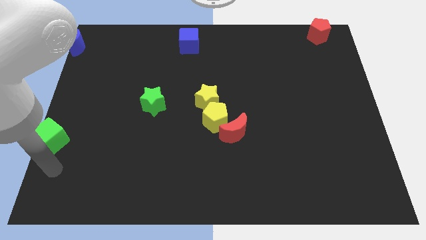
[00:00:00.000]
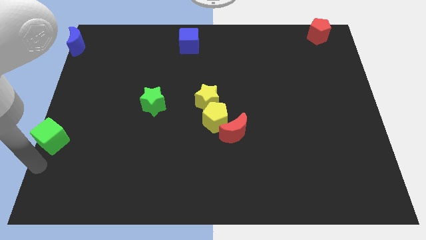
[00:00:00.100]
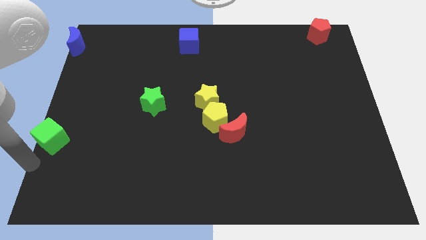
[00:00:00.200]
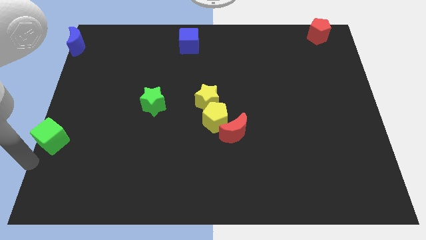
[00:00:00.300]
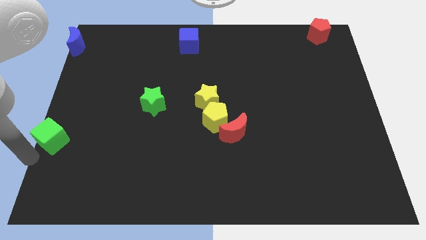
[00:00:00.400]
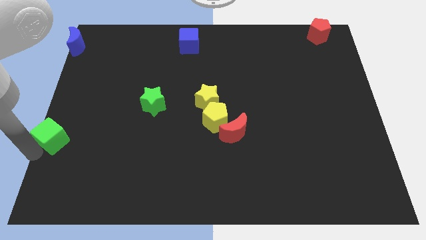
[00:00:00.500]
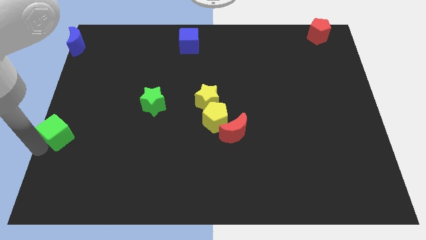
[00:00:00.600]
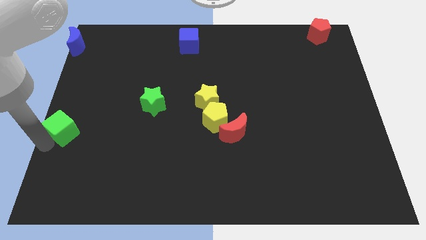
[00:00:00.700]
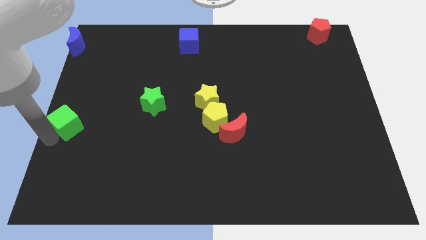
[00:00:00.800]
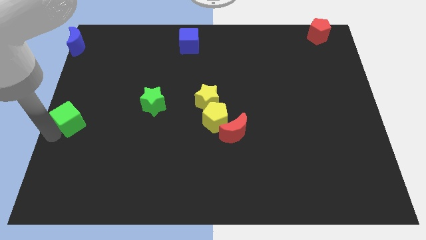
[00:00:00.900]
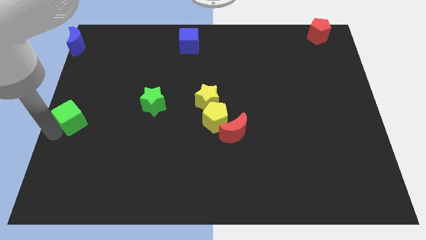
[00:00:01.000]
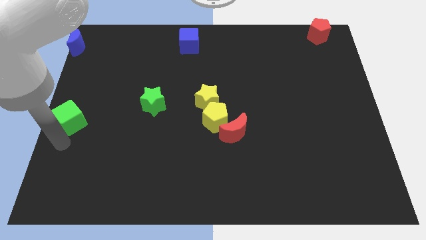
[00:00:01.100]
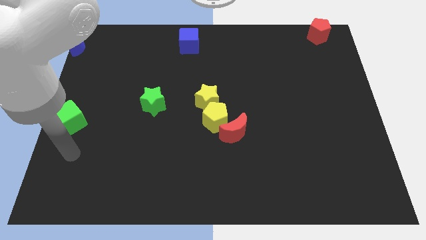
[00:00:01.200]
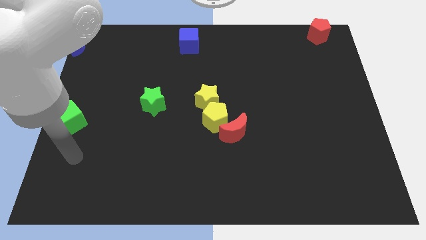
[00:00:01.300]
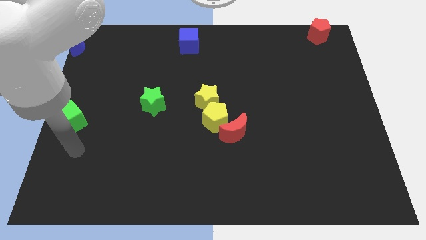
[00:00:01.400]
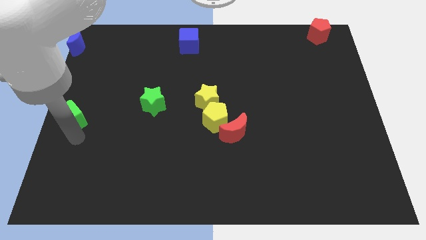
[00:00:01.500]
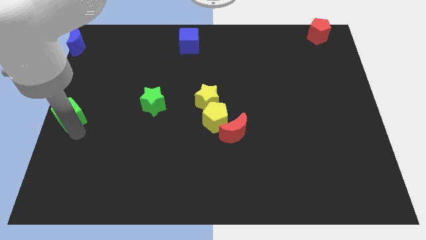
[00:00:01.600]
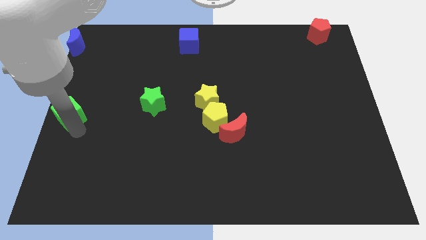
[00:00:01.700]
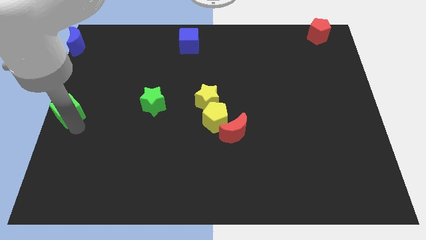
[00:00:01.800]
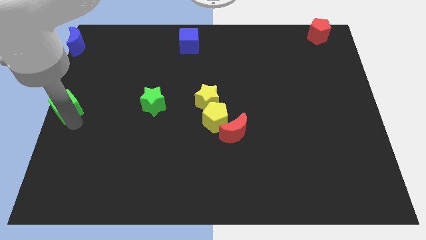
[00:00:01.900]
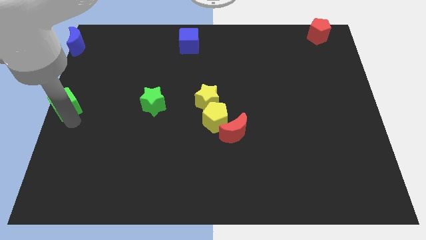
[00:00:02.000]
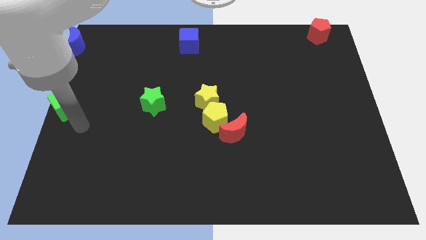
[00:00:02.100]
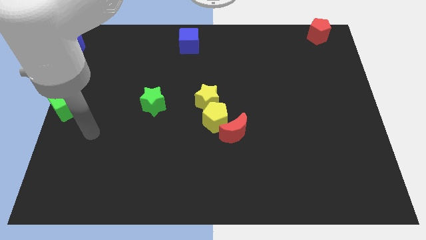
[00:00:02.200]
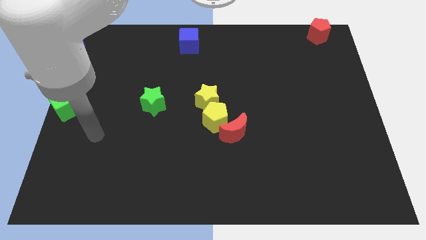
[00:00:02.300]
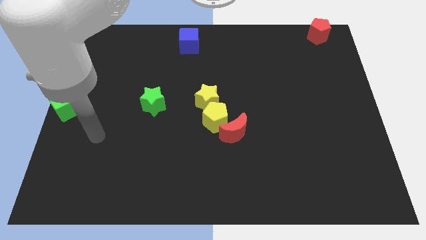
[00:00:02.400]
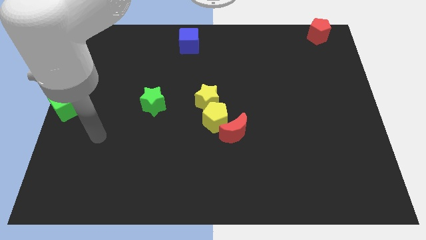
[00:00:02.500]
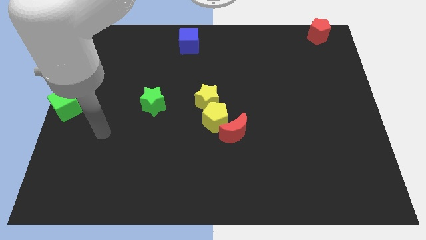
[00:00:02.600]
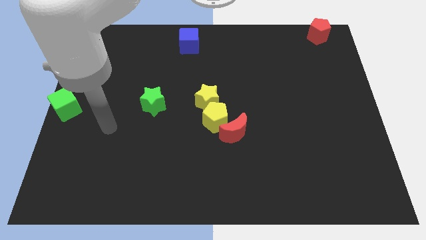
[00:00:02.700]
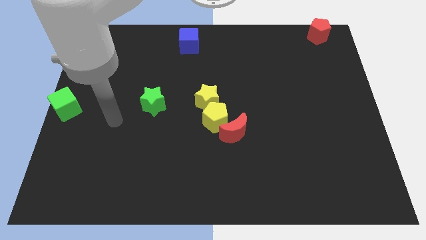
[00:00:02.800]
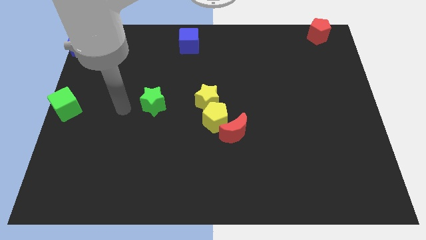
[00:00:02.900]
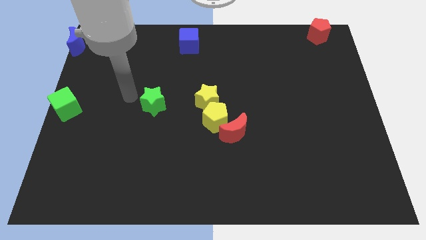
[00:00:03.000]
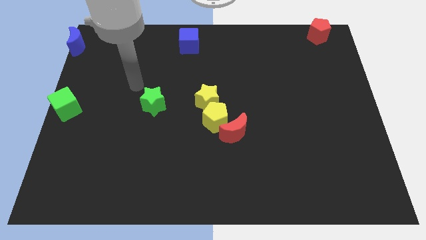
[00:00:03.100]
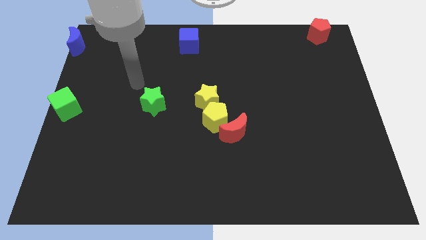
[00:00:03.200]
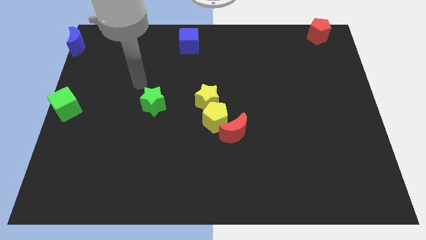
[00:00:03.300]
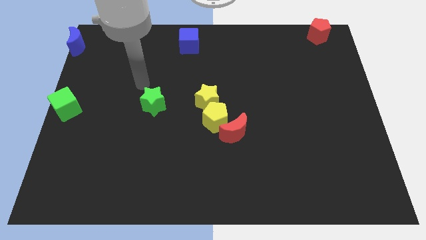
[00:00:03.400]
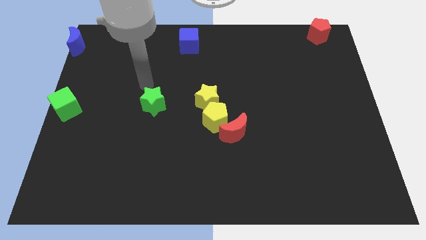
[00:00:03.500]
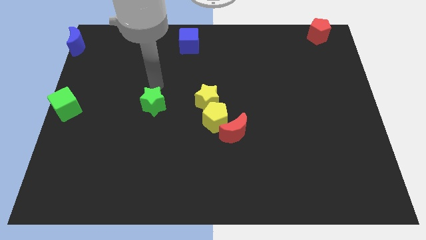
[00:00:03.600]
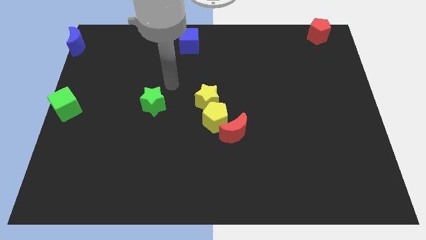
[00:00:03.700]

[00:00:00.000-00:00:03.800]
place the green cube at the center left of the board

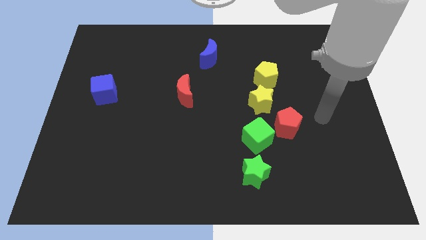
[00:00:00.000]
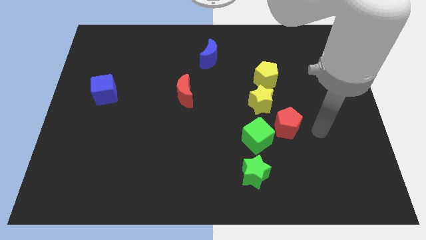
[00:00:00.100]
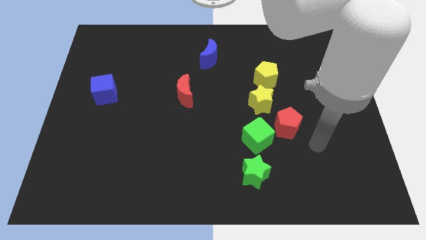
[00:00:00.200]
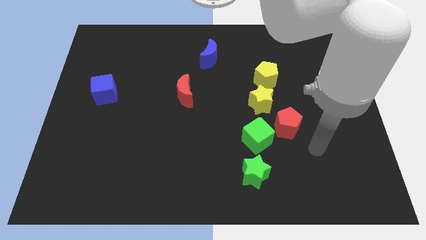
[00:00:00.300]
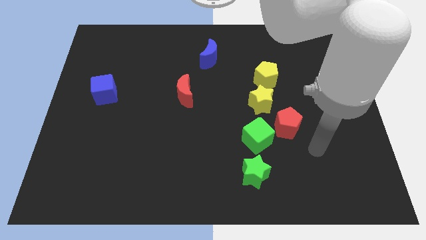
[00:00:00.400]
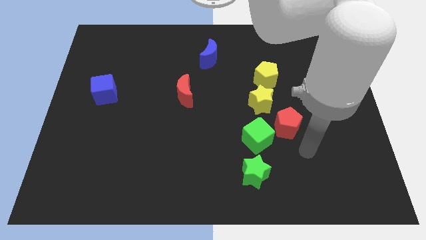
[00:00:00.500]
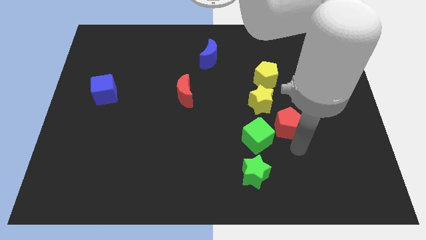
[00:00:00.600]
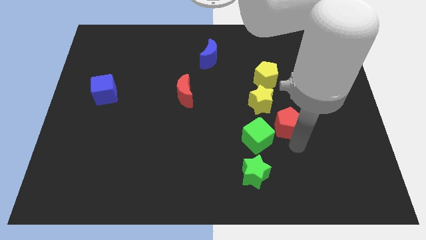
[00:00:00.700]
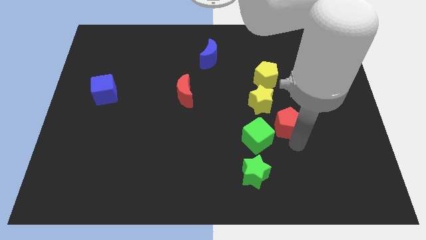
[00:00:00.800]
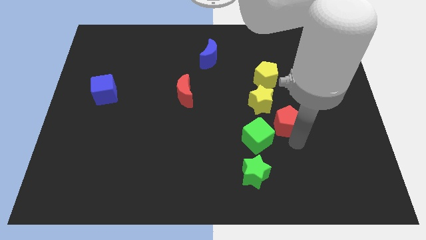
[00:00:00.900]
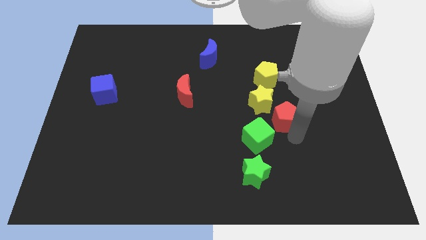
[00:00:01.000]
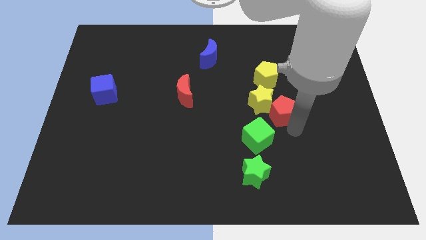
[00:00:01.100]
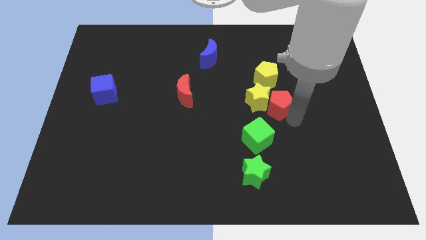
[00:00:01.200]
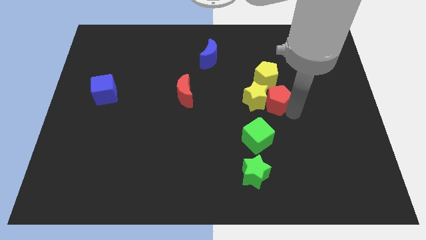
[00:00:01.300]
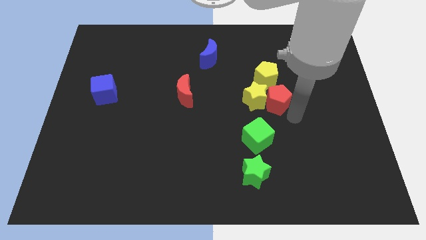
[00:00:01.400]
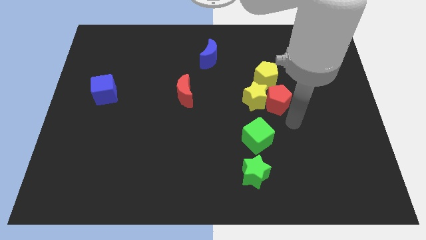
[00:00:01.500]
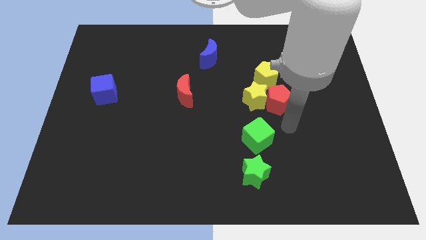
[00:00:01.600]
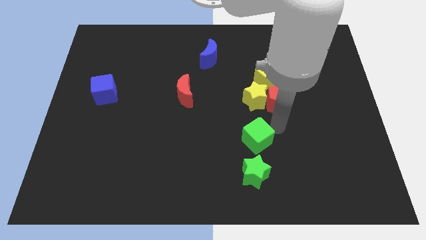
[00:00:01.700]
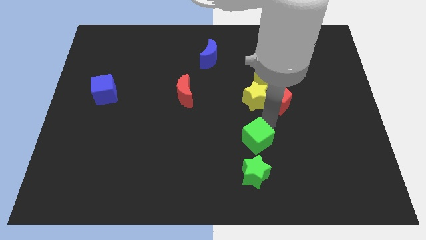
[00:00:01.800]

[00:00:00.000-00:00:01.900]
move red pentagon into the yellow star

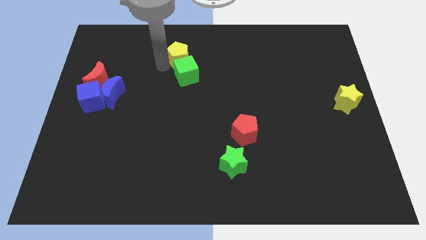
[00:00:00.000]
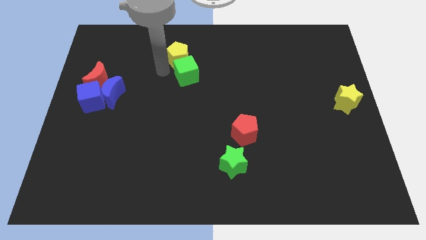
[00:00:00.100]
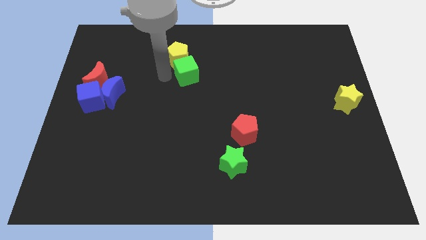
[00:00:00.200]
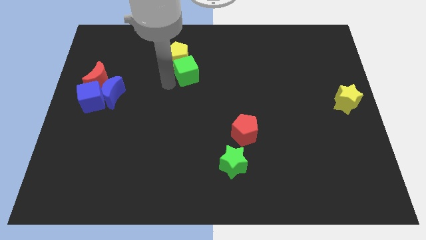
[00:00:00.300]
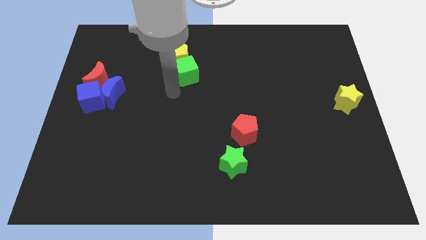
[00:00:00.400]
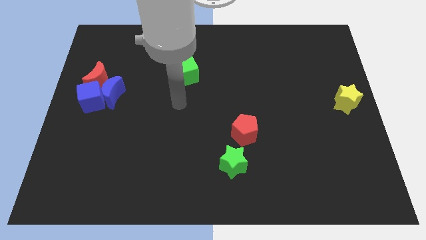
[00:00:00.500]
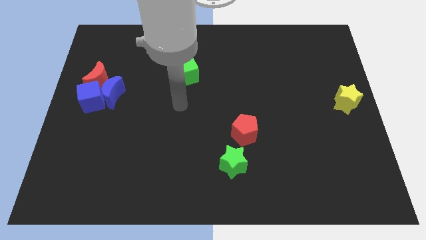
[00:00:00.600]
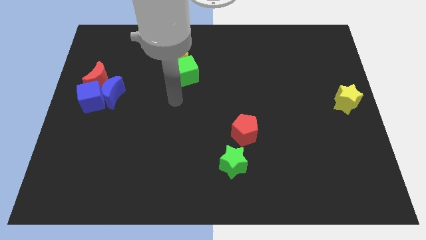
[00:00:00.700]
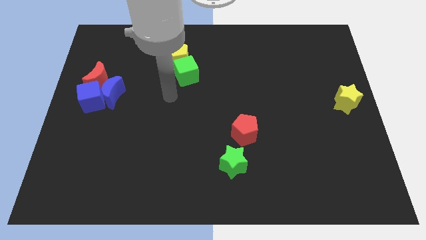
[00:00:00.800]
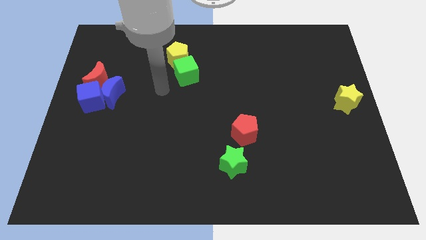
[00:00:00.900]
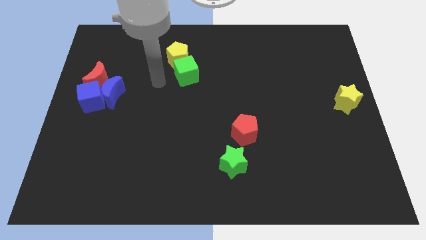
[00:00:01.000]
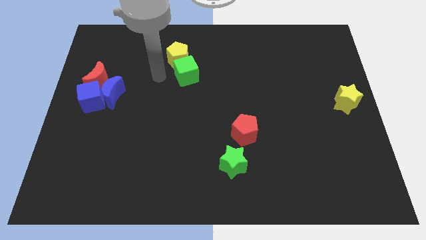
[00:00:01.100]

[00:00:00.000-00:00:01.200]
point your arm to the left side of green cube

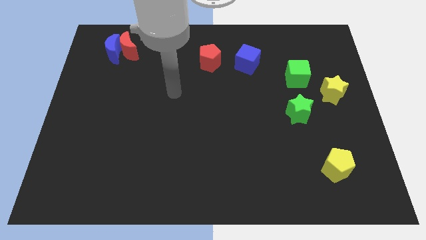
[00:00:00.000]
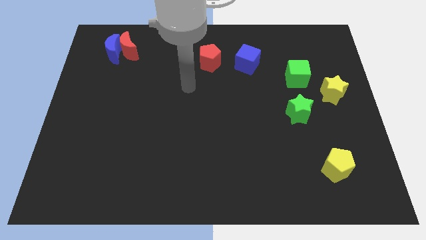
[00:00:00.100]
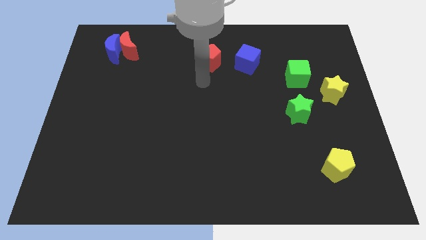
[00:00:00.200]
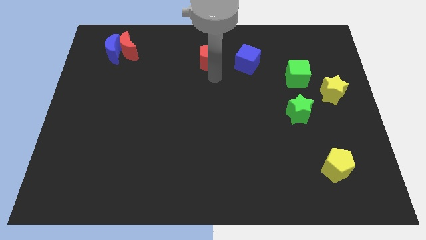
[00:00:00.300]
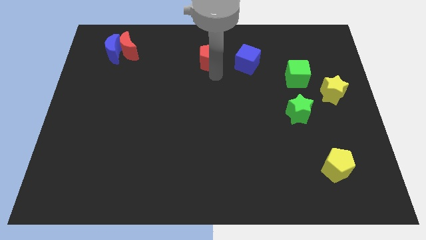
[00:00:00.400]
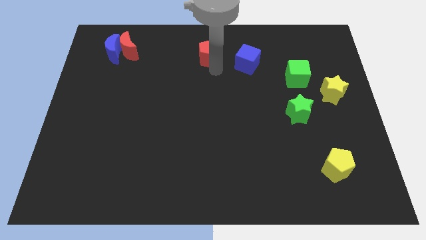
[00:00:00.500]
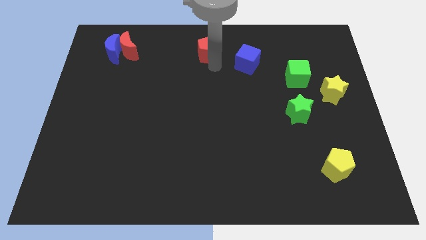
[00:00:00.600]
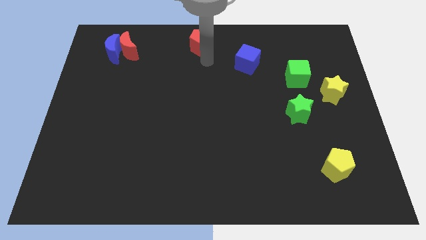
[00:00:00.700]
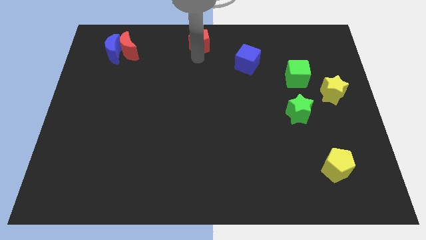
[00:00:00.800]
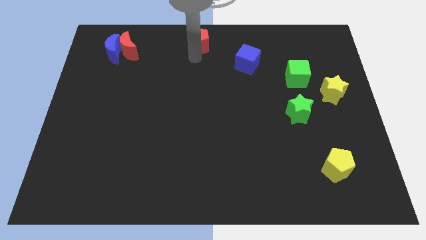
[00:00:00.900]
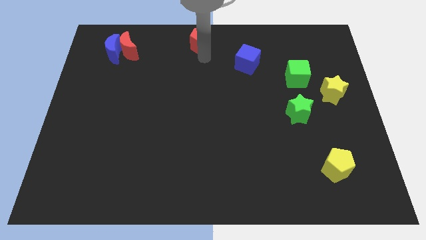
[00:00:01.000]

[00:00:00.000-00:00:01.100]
move red pentagon to the center top

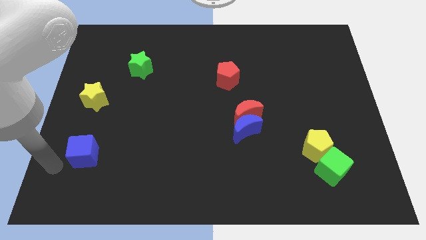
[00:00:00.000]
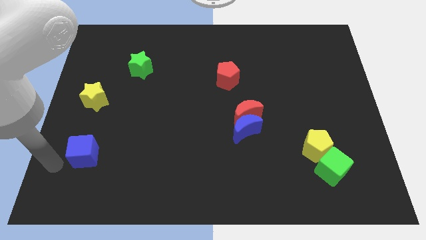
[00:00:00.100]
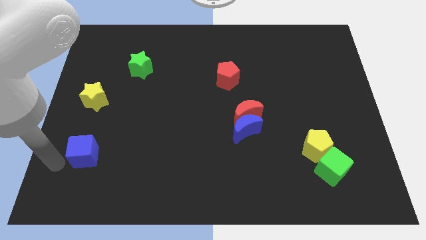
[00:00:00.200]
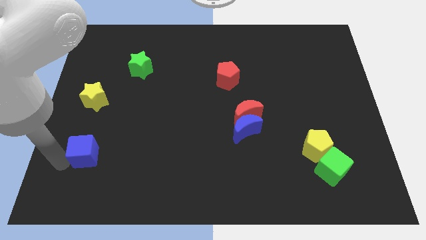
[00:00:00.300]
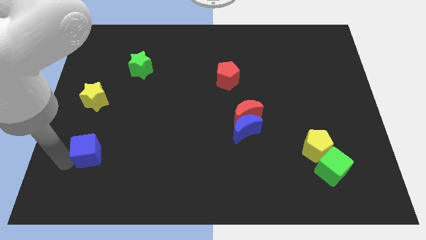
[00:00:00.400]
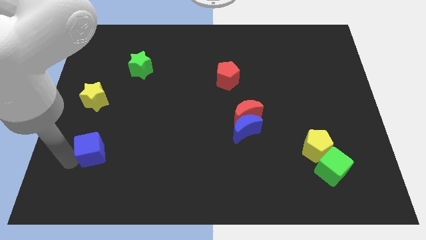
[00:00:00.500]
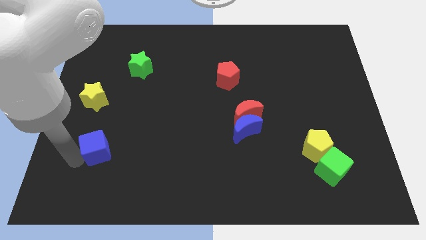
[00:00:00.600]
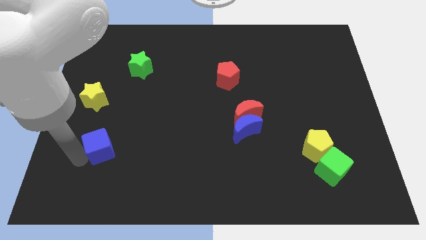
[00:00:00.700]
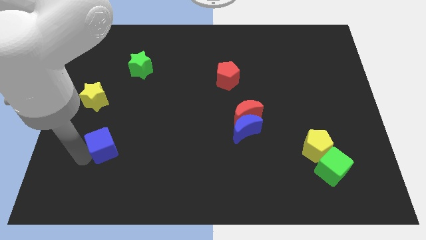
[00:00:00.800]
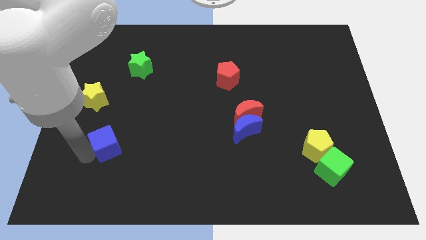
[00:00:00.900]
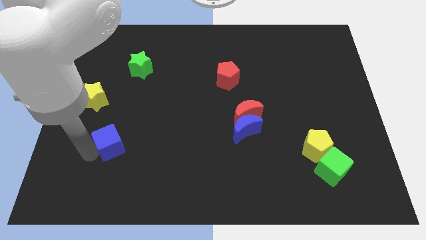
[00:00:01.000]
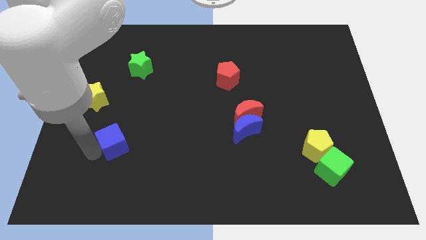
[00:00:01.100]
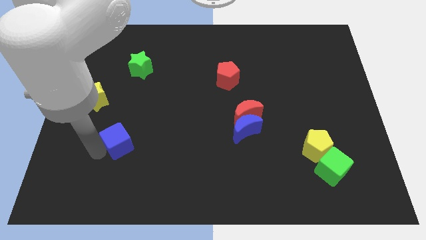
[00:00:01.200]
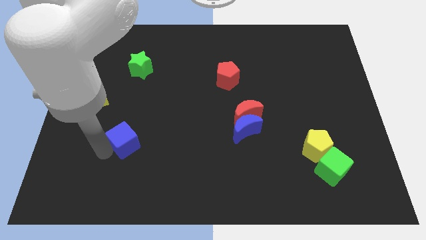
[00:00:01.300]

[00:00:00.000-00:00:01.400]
move the blue cube to the right of the board
